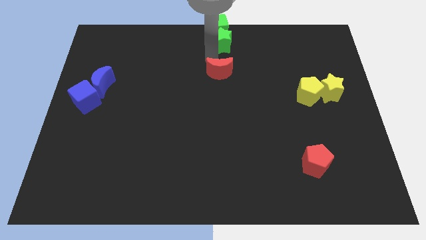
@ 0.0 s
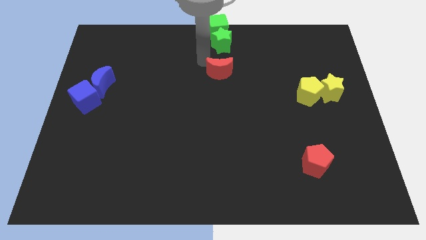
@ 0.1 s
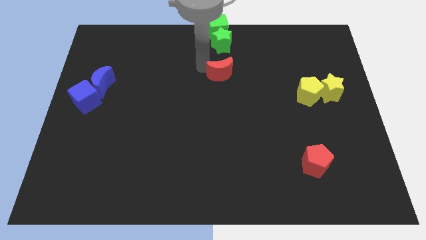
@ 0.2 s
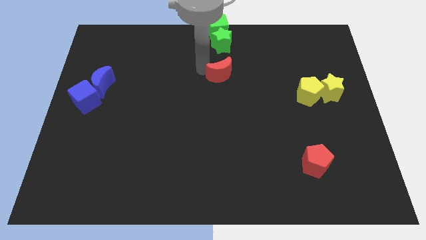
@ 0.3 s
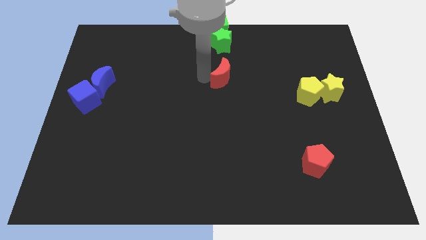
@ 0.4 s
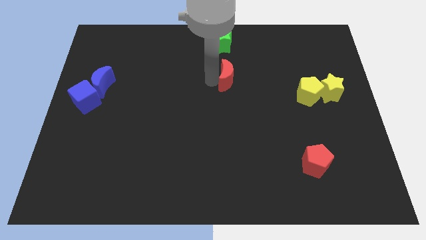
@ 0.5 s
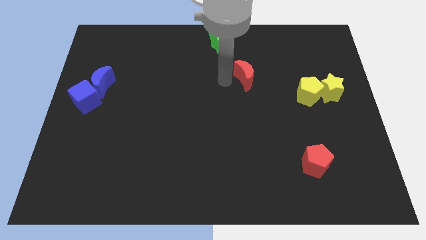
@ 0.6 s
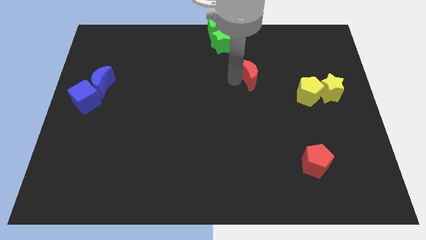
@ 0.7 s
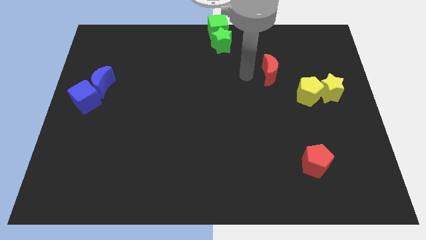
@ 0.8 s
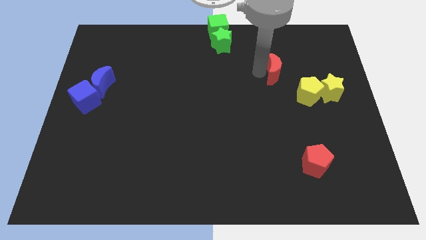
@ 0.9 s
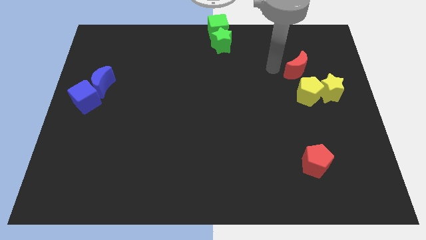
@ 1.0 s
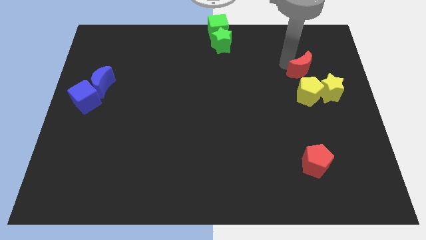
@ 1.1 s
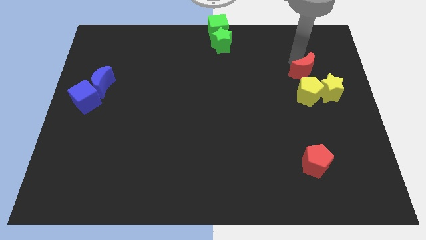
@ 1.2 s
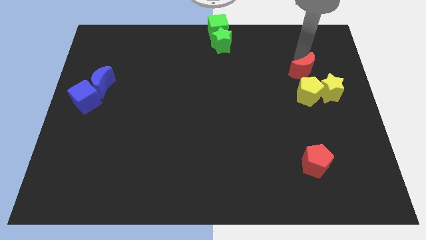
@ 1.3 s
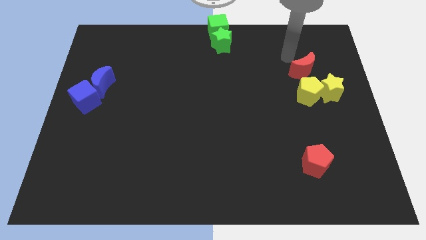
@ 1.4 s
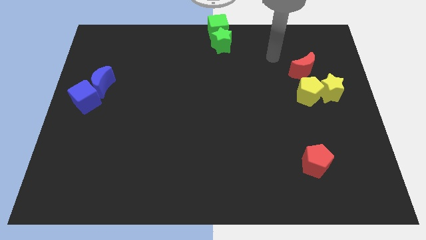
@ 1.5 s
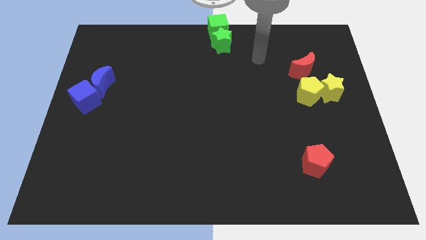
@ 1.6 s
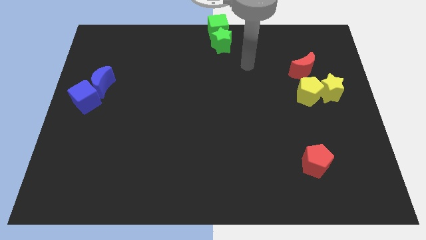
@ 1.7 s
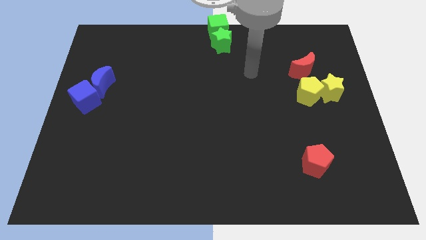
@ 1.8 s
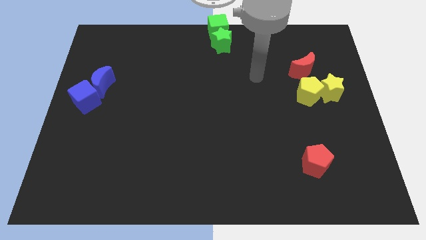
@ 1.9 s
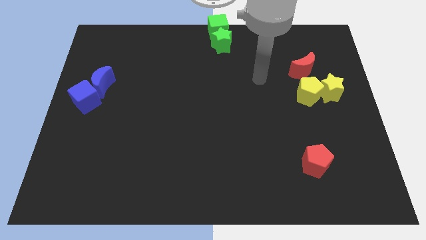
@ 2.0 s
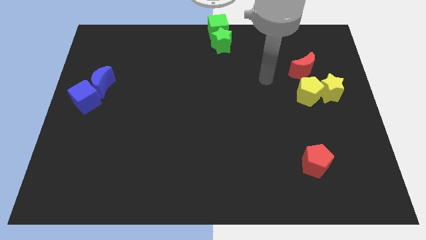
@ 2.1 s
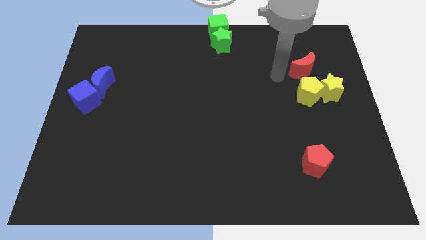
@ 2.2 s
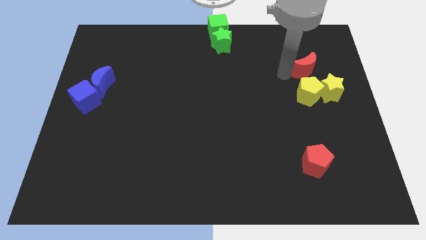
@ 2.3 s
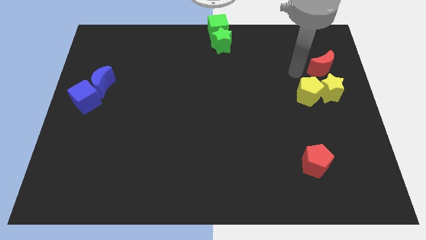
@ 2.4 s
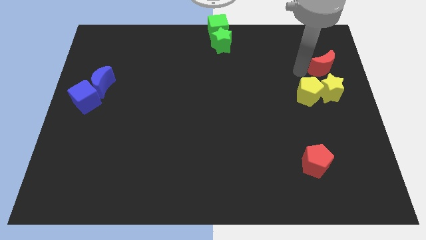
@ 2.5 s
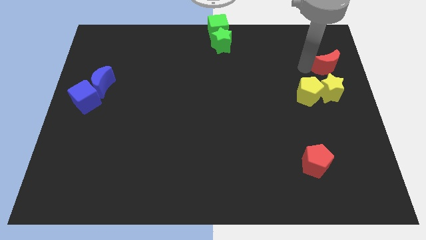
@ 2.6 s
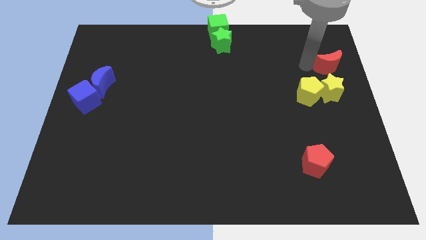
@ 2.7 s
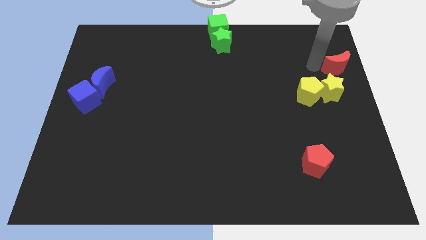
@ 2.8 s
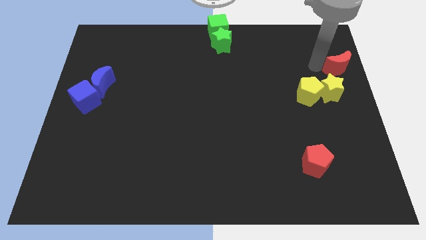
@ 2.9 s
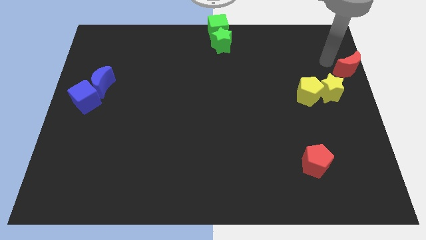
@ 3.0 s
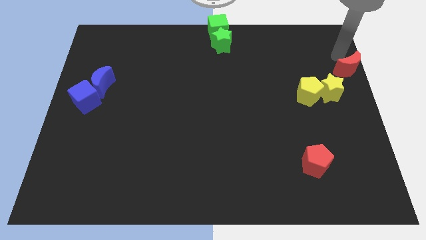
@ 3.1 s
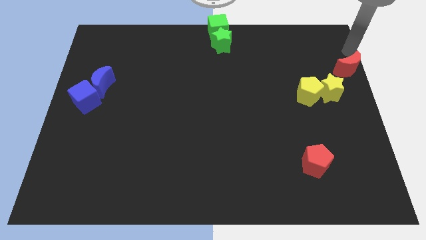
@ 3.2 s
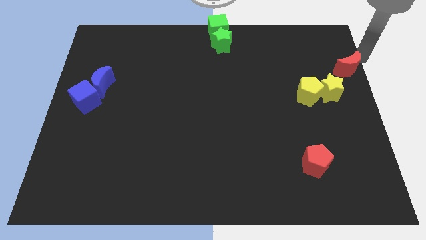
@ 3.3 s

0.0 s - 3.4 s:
move the red crescent diagonally top right above the yellow star

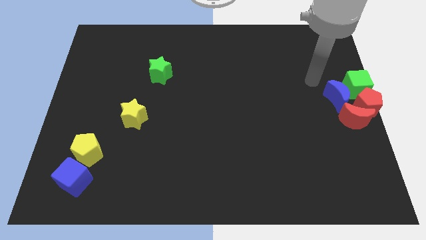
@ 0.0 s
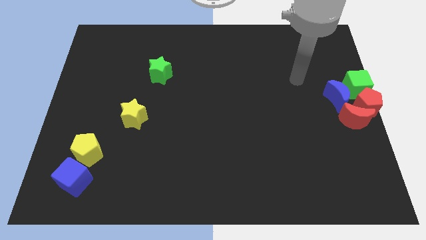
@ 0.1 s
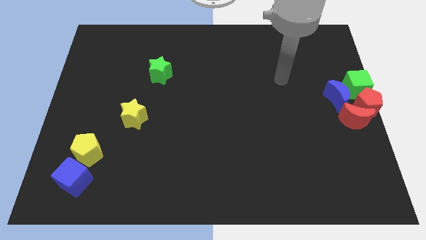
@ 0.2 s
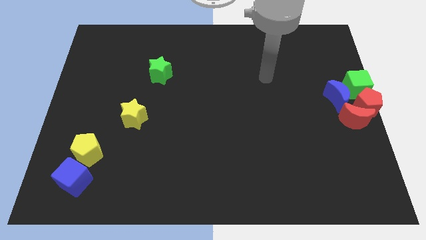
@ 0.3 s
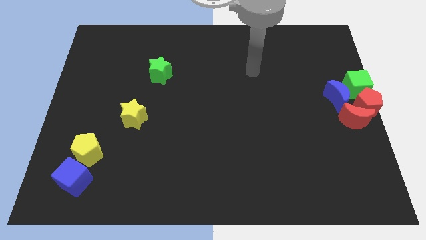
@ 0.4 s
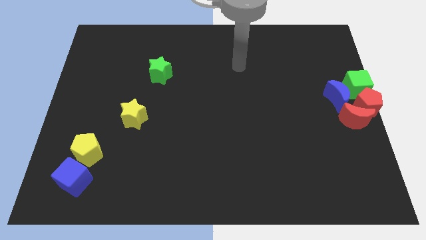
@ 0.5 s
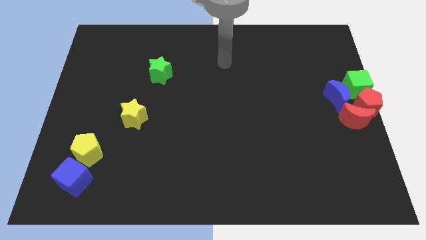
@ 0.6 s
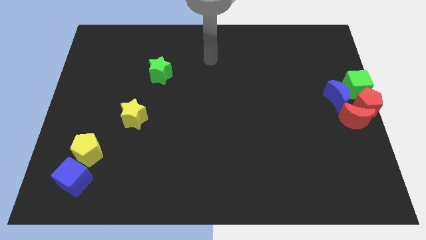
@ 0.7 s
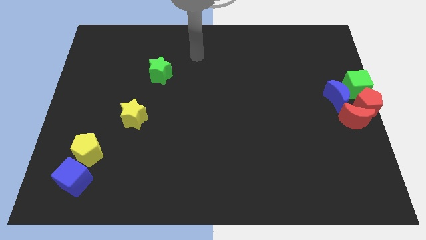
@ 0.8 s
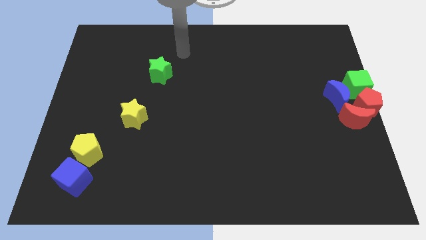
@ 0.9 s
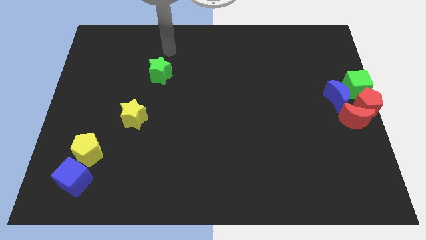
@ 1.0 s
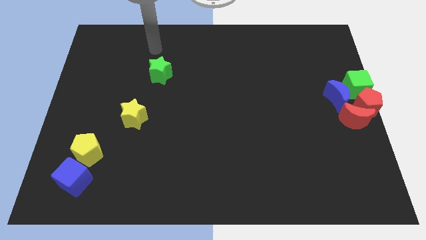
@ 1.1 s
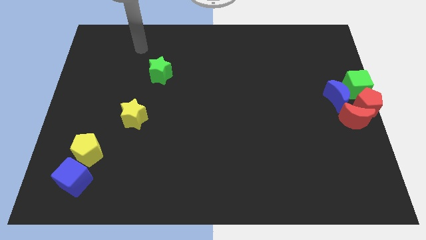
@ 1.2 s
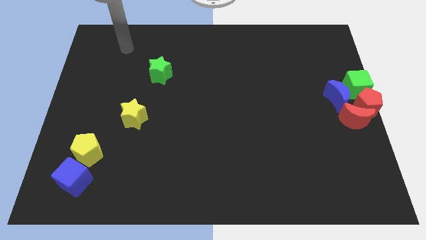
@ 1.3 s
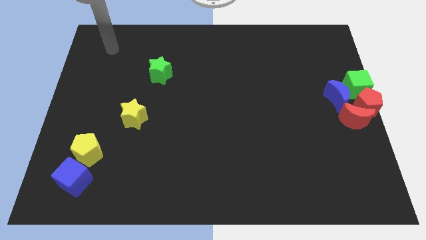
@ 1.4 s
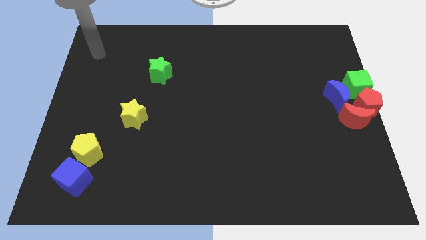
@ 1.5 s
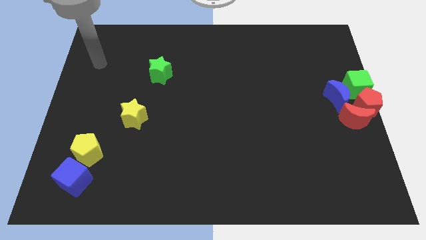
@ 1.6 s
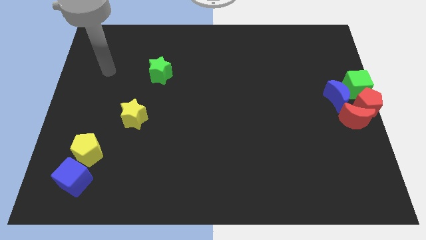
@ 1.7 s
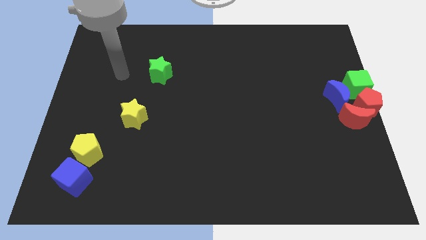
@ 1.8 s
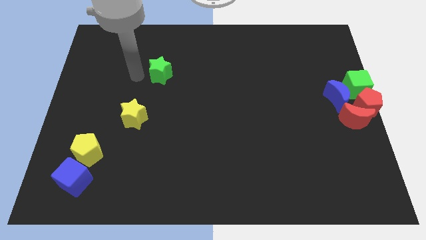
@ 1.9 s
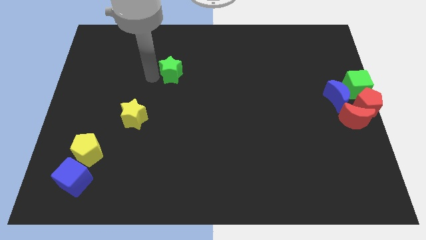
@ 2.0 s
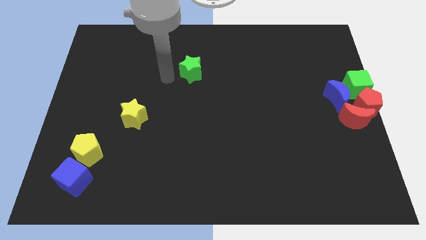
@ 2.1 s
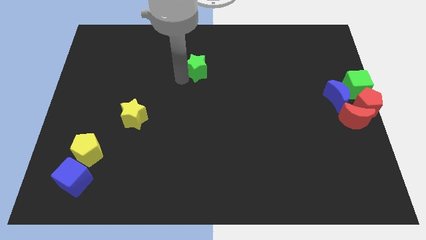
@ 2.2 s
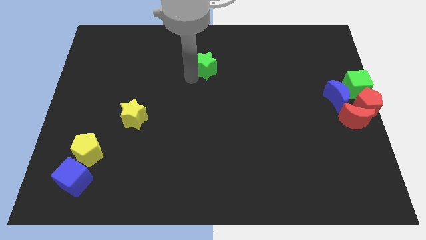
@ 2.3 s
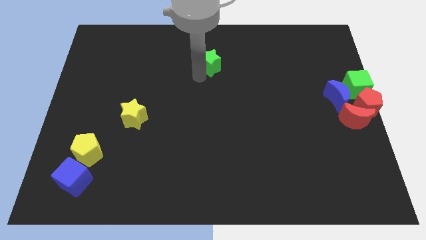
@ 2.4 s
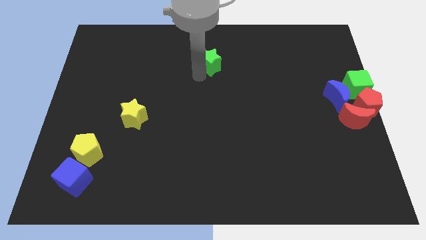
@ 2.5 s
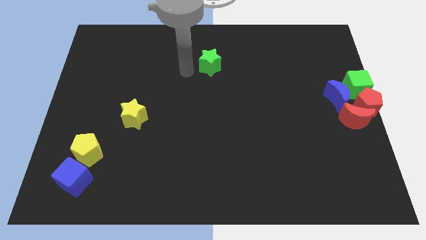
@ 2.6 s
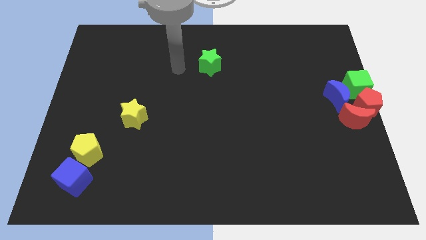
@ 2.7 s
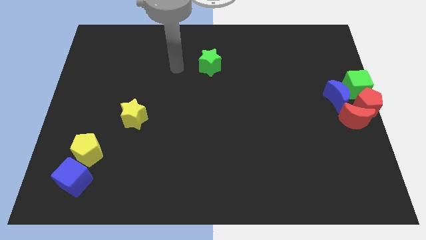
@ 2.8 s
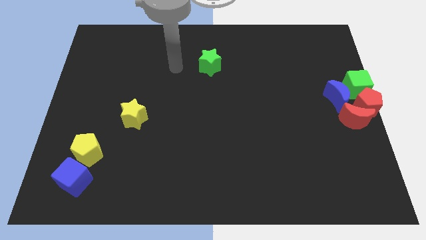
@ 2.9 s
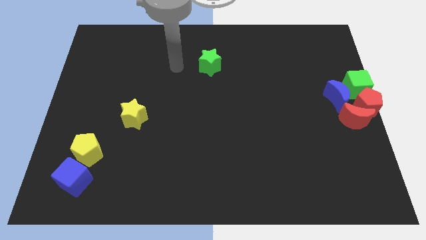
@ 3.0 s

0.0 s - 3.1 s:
move your arm away from the blue moon

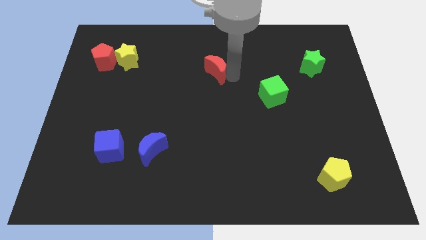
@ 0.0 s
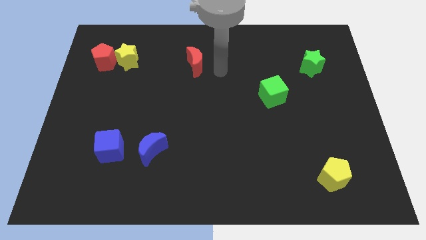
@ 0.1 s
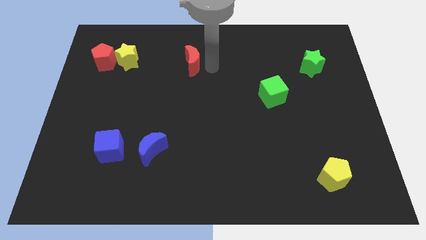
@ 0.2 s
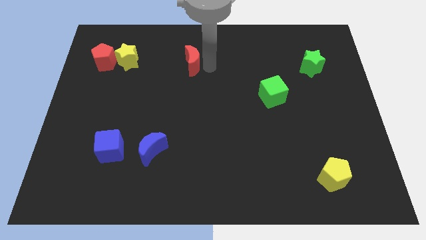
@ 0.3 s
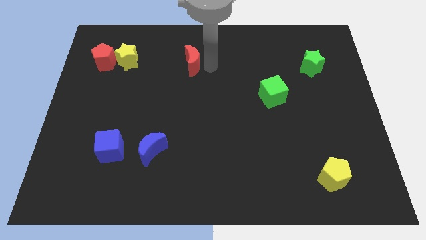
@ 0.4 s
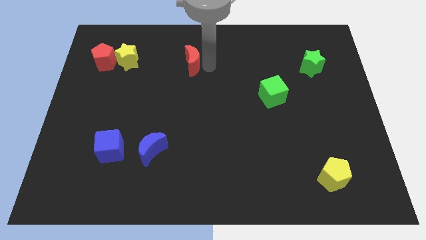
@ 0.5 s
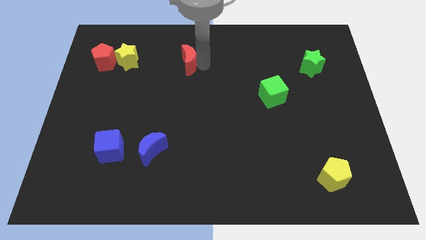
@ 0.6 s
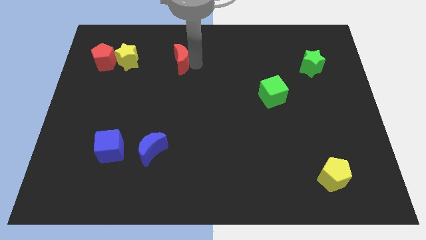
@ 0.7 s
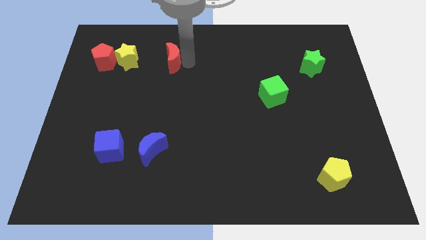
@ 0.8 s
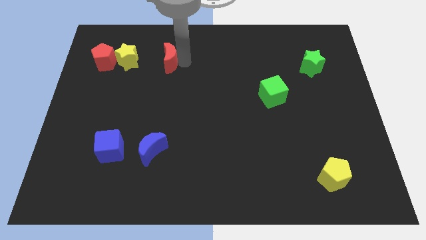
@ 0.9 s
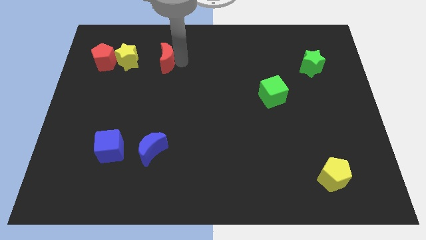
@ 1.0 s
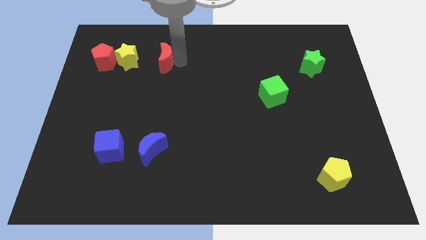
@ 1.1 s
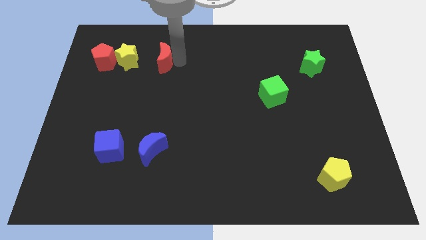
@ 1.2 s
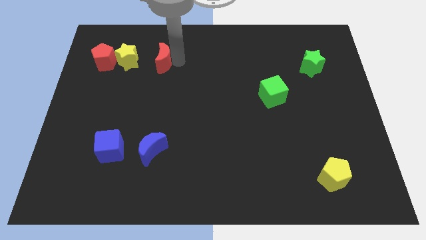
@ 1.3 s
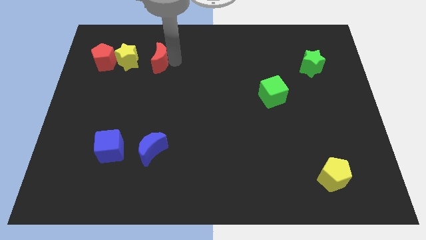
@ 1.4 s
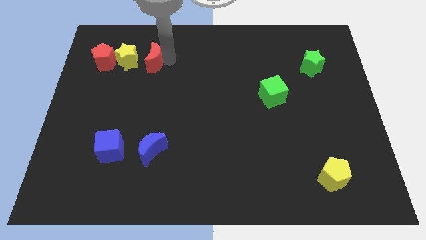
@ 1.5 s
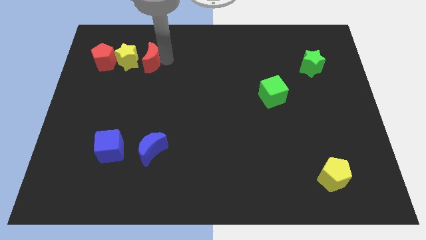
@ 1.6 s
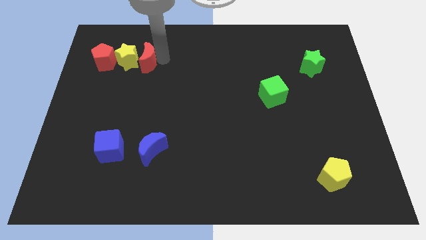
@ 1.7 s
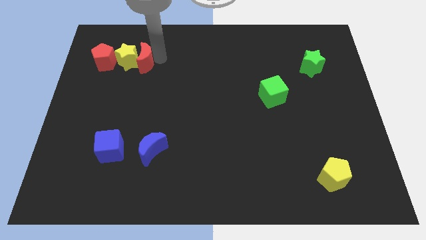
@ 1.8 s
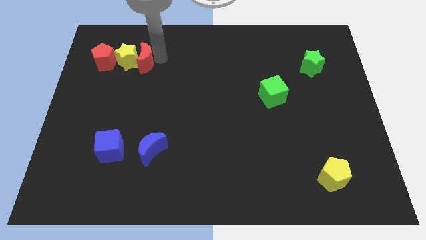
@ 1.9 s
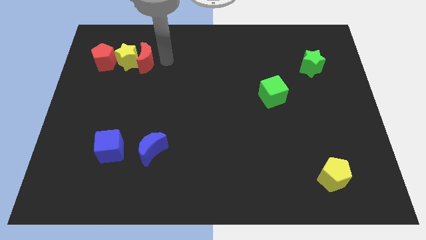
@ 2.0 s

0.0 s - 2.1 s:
attach the red moon to the yellow star

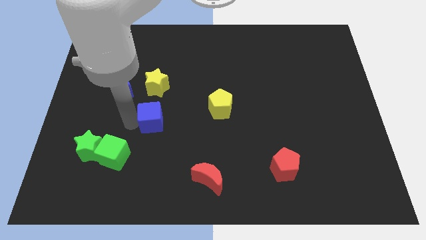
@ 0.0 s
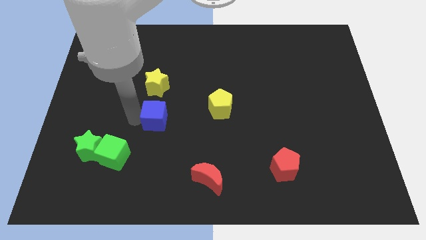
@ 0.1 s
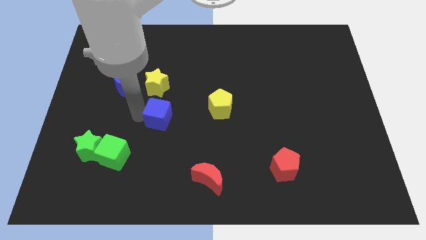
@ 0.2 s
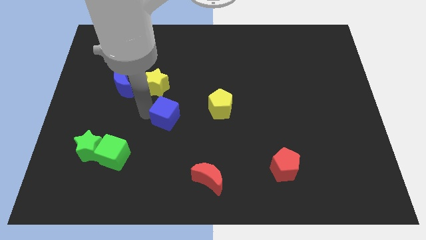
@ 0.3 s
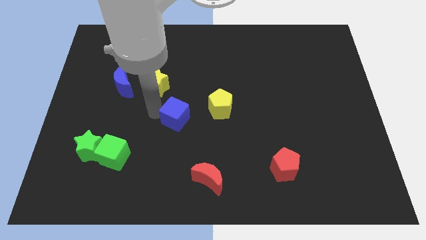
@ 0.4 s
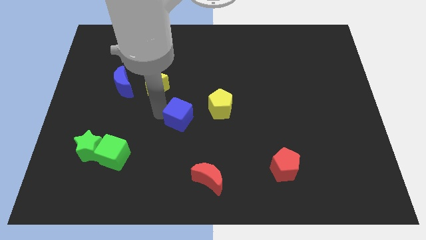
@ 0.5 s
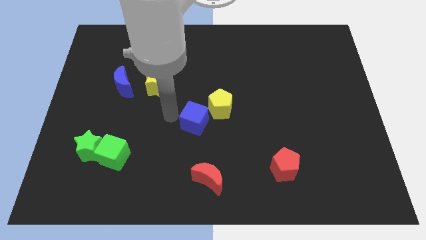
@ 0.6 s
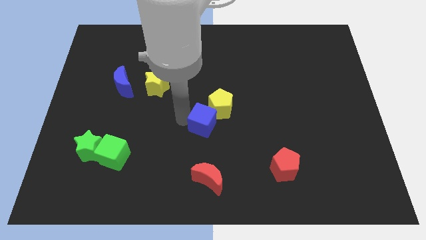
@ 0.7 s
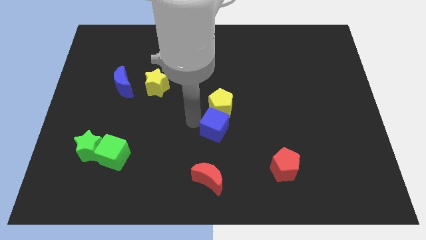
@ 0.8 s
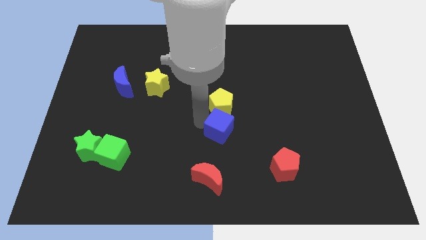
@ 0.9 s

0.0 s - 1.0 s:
place the blue cube below the yellow pentagon
